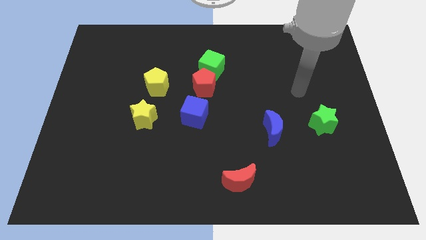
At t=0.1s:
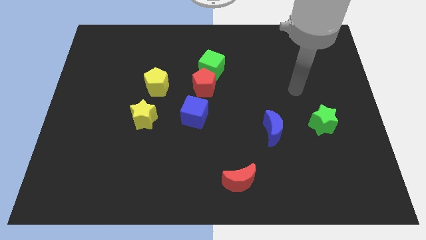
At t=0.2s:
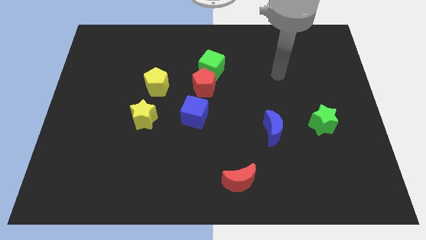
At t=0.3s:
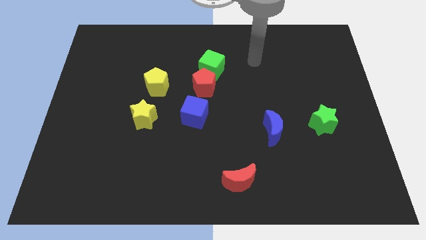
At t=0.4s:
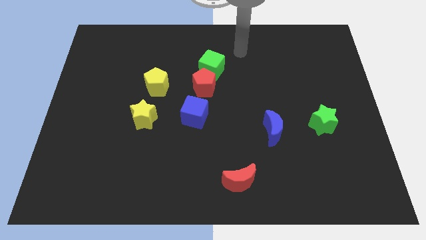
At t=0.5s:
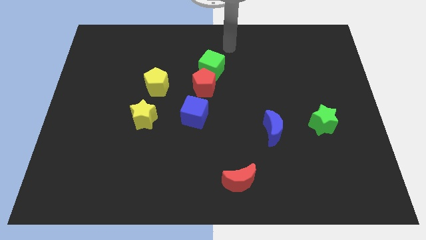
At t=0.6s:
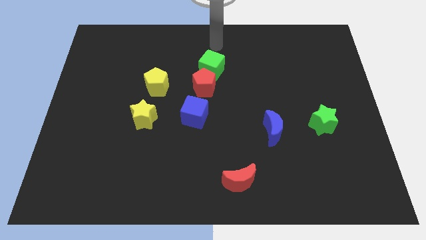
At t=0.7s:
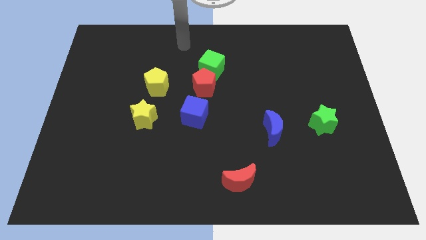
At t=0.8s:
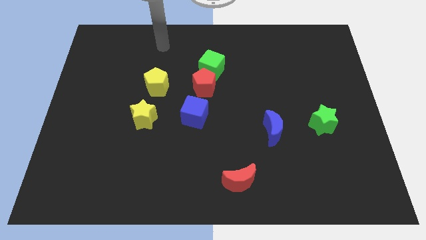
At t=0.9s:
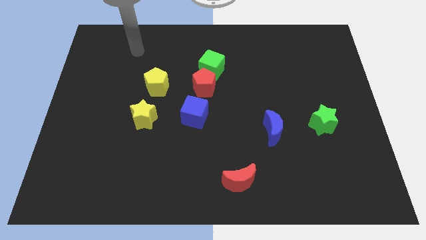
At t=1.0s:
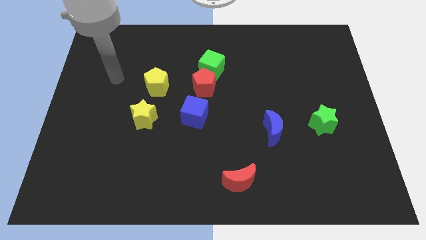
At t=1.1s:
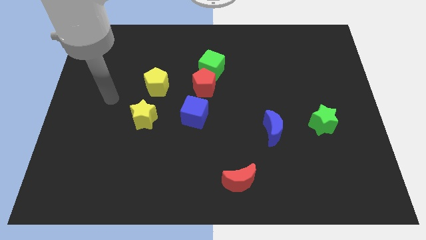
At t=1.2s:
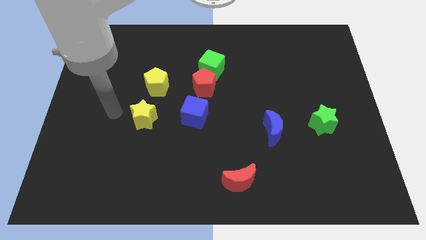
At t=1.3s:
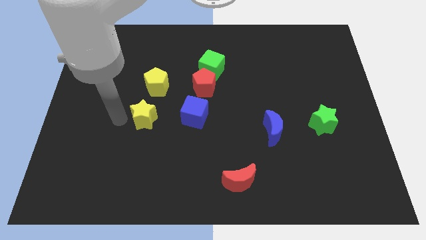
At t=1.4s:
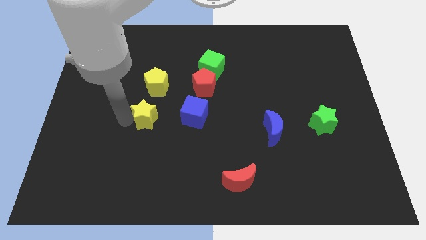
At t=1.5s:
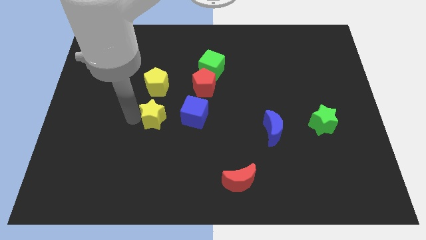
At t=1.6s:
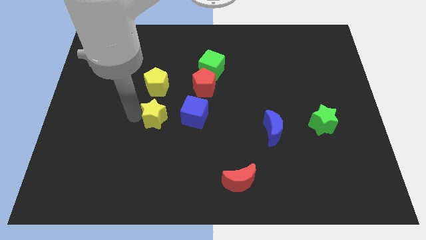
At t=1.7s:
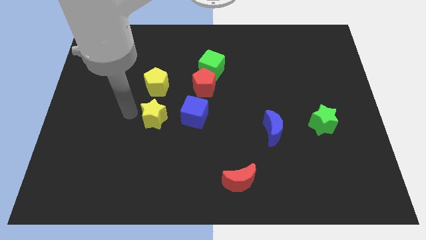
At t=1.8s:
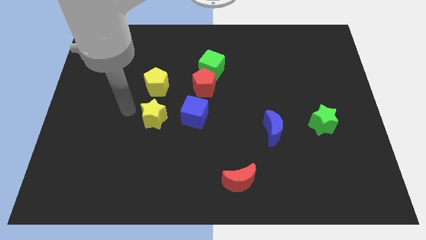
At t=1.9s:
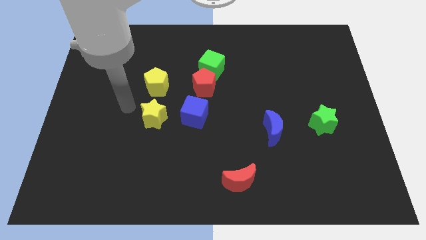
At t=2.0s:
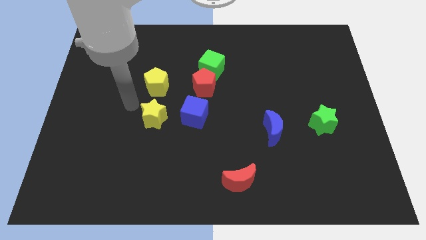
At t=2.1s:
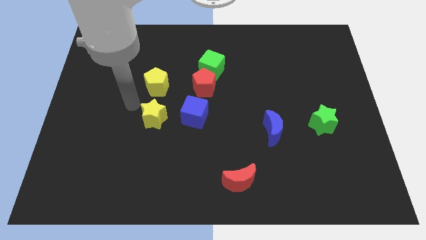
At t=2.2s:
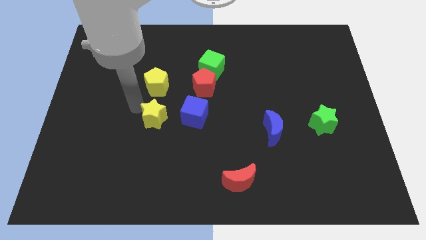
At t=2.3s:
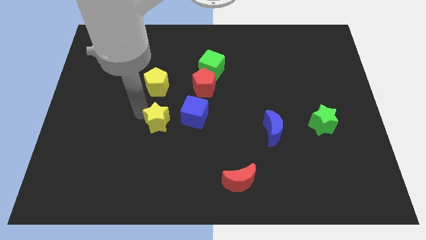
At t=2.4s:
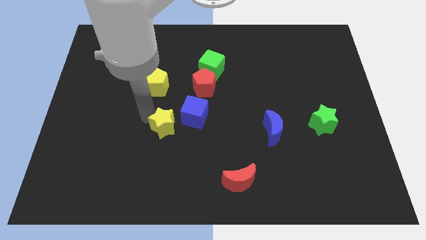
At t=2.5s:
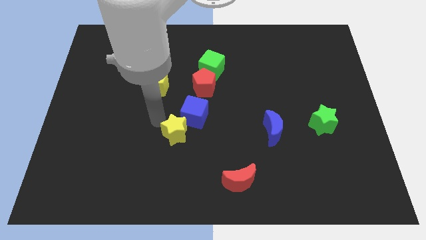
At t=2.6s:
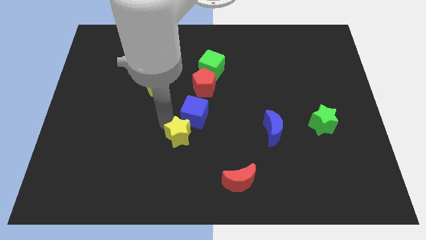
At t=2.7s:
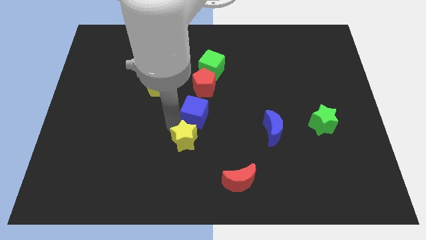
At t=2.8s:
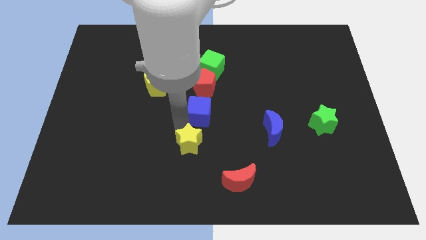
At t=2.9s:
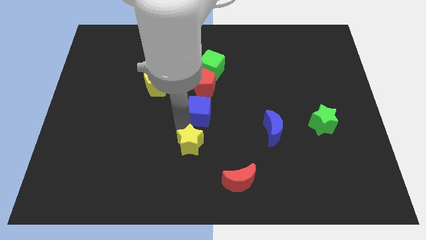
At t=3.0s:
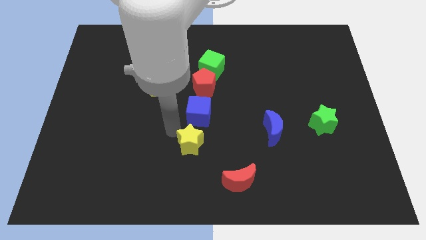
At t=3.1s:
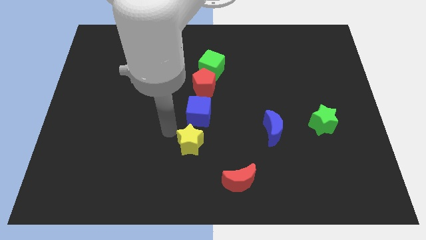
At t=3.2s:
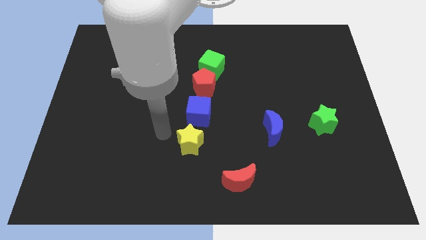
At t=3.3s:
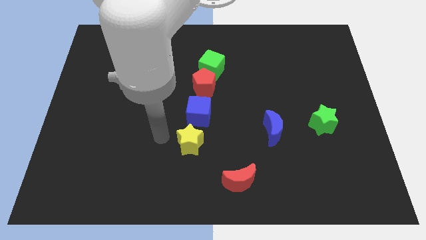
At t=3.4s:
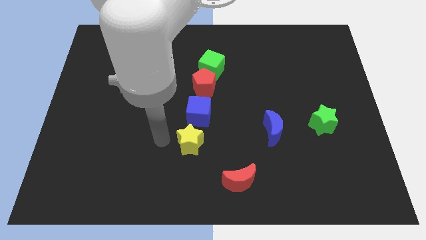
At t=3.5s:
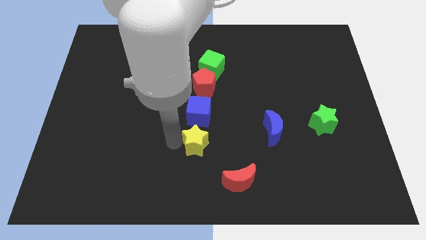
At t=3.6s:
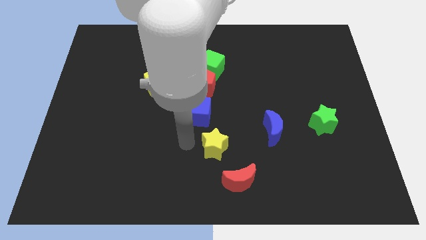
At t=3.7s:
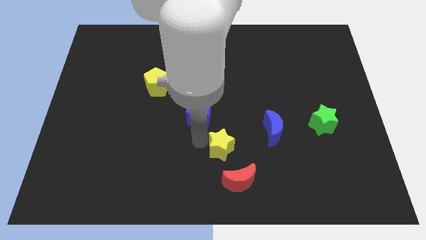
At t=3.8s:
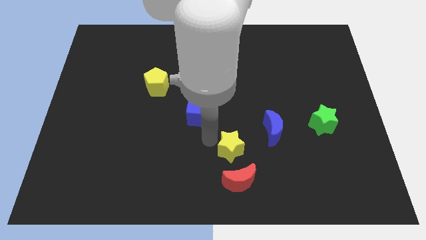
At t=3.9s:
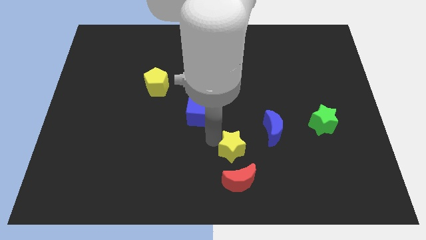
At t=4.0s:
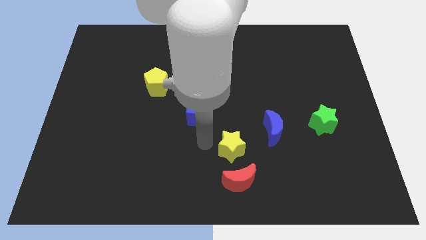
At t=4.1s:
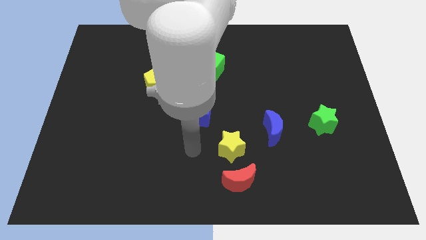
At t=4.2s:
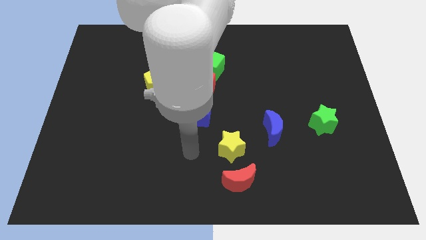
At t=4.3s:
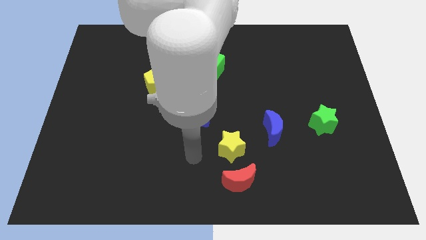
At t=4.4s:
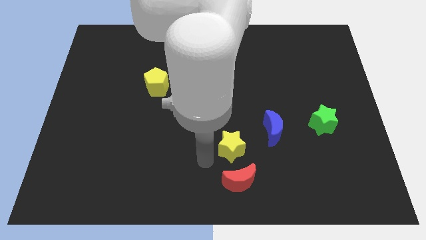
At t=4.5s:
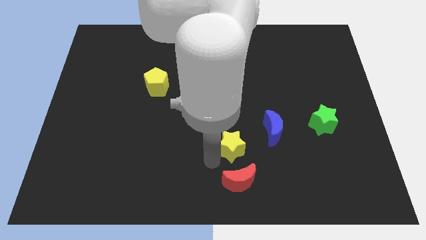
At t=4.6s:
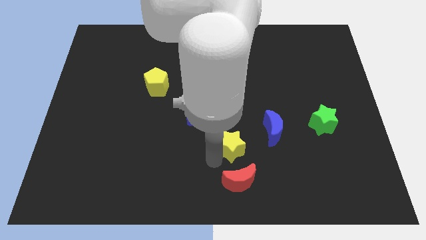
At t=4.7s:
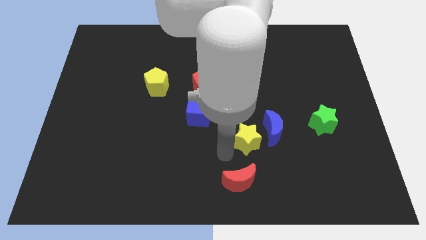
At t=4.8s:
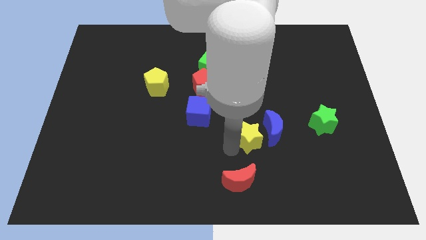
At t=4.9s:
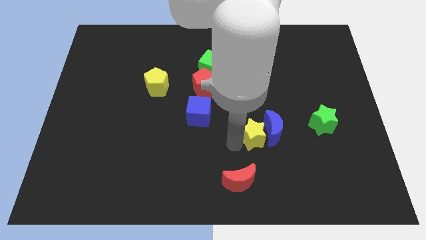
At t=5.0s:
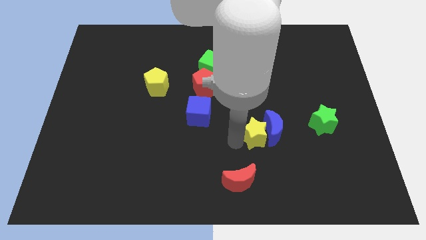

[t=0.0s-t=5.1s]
push the yellow star close to the blue moon

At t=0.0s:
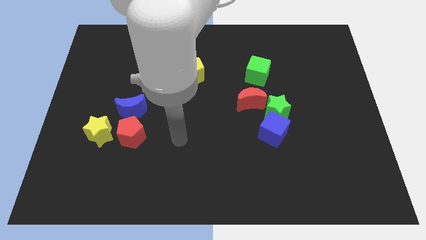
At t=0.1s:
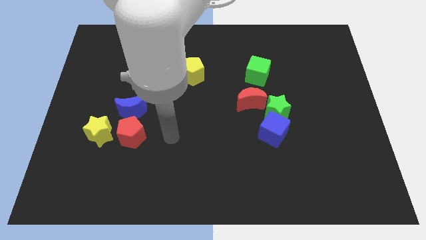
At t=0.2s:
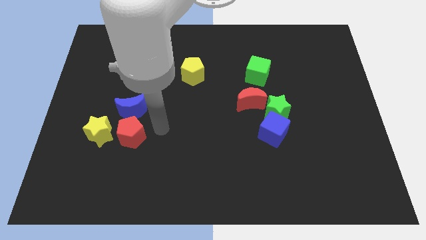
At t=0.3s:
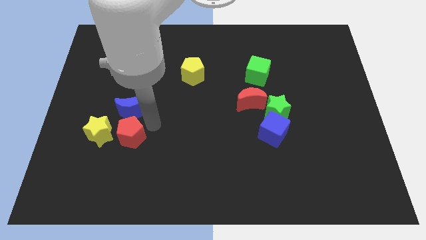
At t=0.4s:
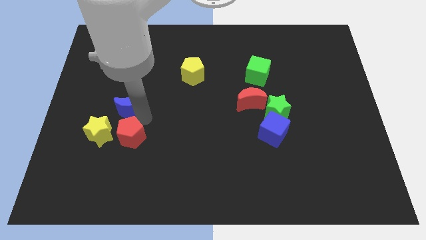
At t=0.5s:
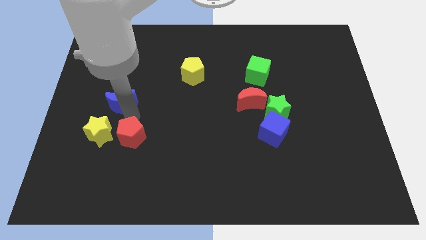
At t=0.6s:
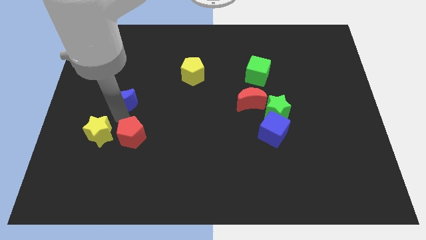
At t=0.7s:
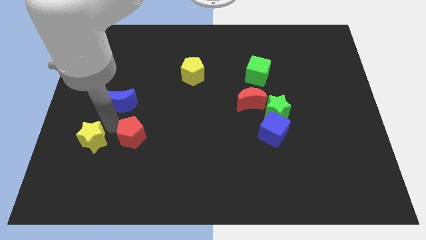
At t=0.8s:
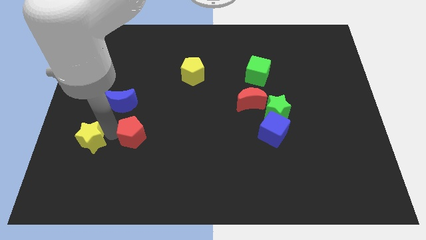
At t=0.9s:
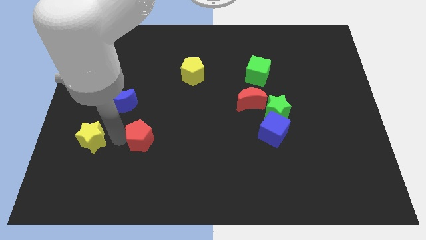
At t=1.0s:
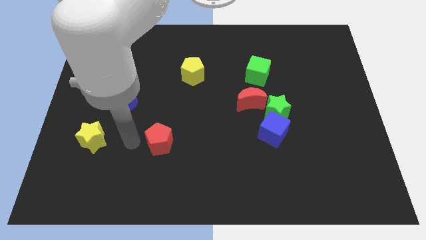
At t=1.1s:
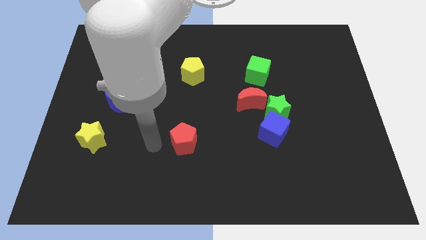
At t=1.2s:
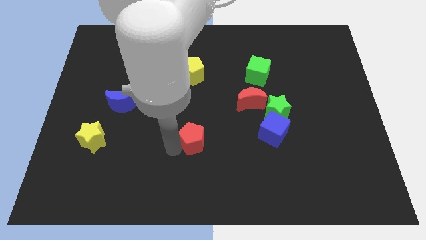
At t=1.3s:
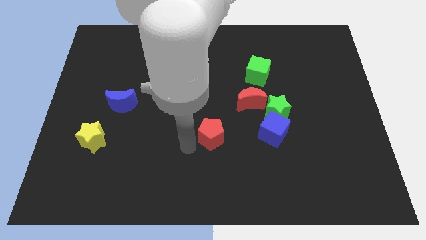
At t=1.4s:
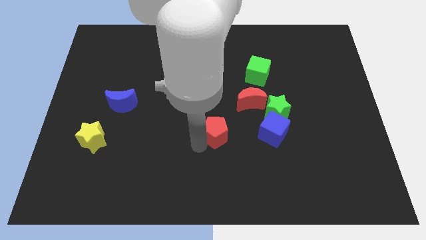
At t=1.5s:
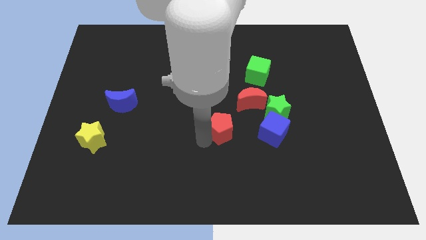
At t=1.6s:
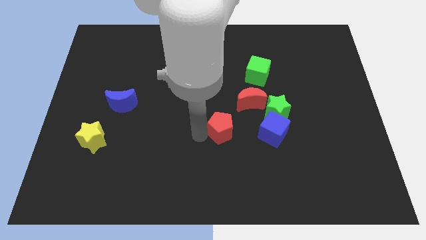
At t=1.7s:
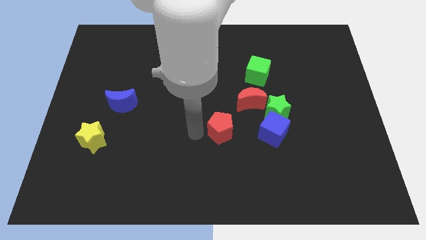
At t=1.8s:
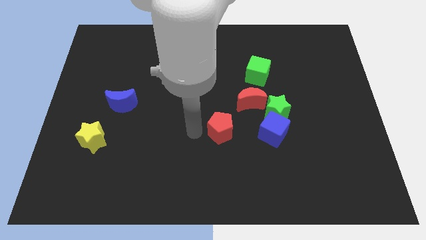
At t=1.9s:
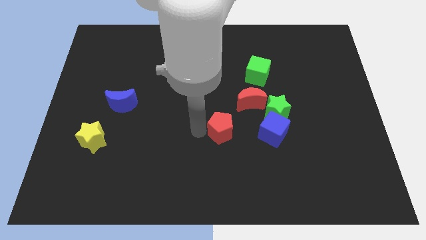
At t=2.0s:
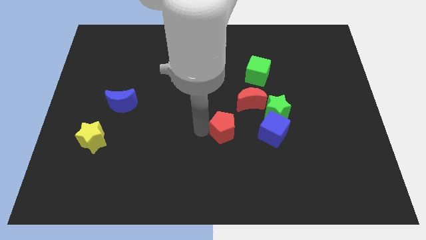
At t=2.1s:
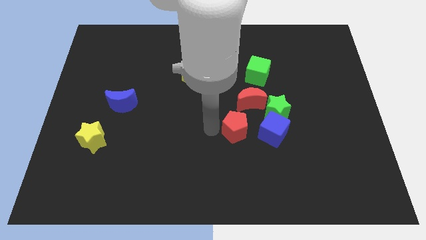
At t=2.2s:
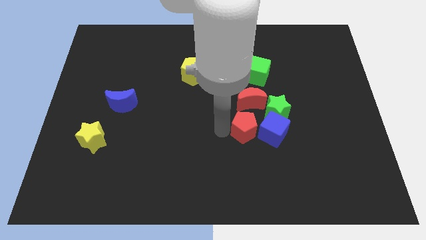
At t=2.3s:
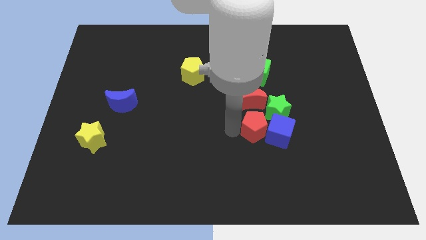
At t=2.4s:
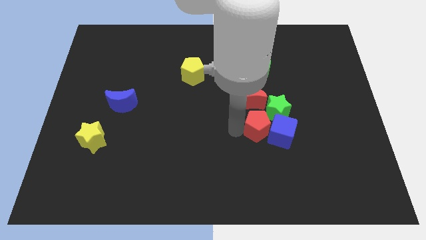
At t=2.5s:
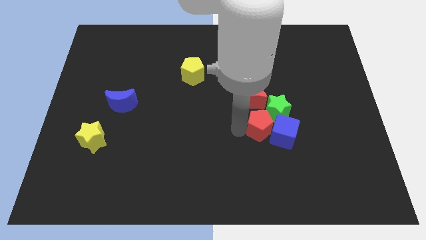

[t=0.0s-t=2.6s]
put the red pentagon to the blue cube

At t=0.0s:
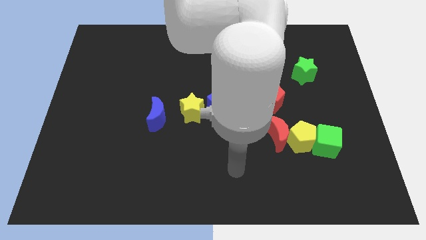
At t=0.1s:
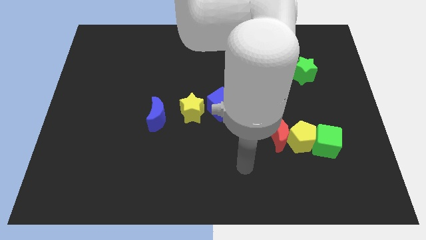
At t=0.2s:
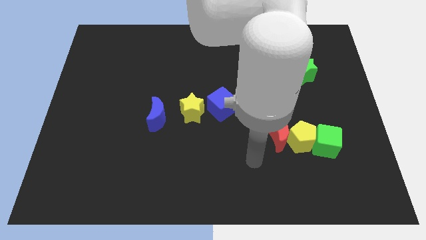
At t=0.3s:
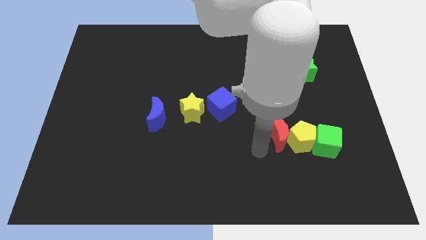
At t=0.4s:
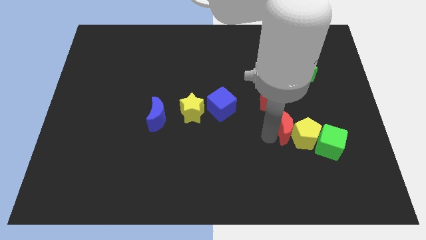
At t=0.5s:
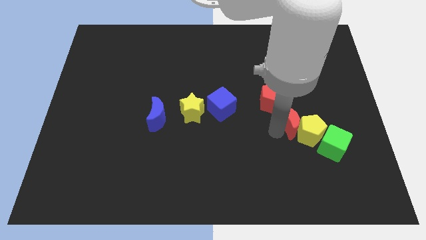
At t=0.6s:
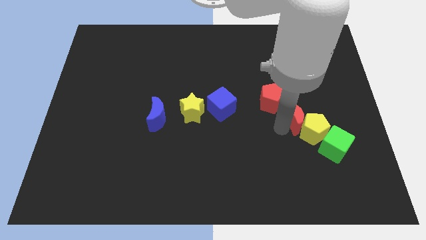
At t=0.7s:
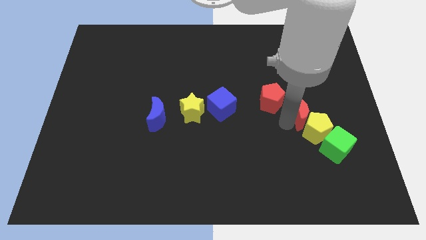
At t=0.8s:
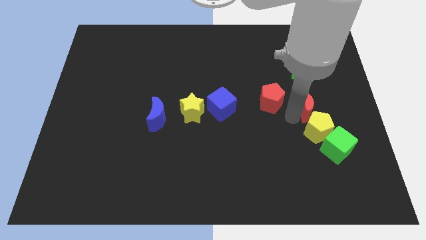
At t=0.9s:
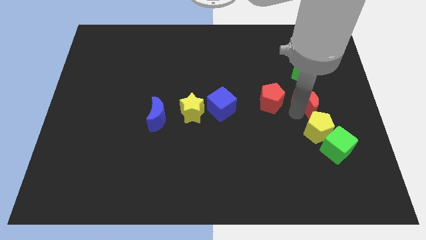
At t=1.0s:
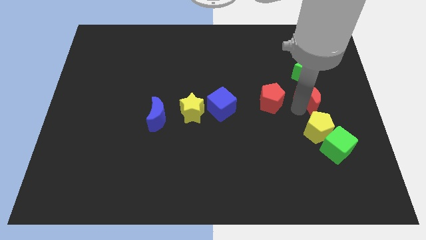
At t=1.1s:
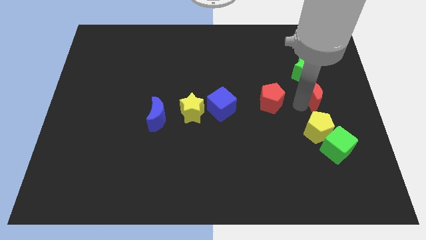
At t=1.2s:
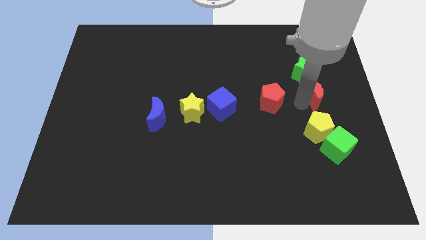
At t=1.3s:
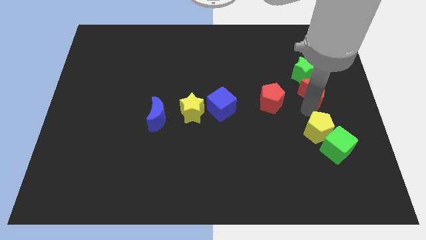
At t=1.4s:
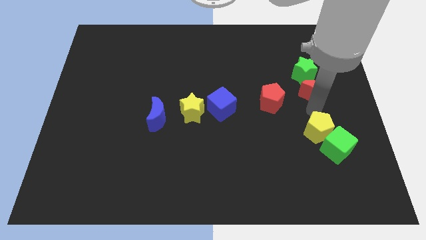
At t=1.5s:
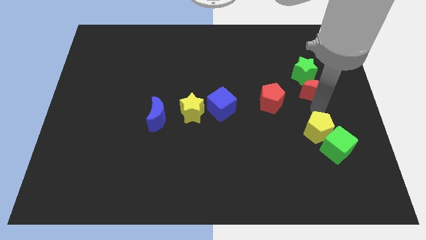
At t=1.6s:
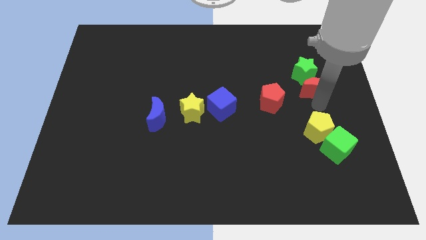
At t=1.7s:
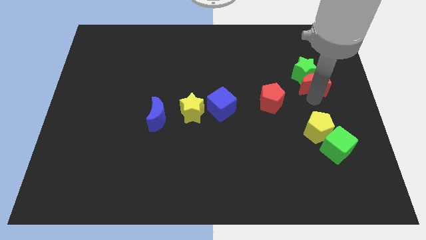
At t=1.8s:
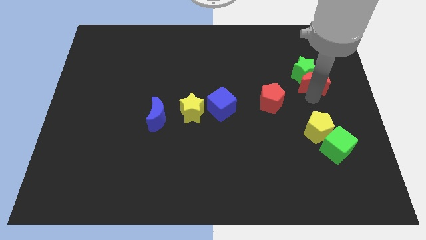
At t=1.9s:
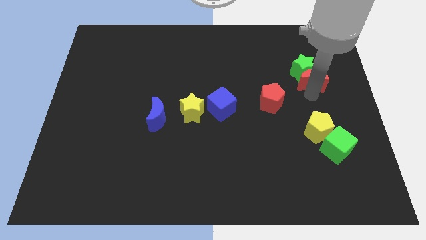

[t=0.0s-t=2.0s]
move the red moon to the green star
